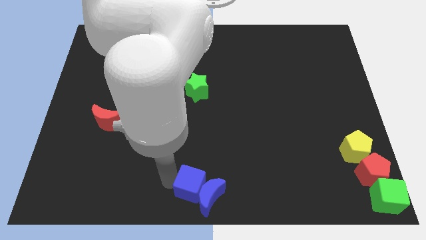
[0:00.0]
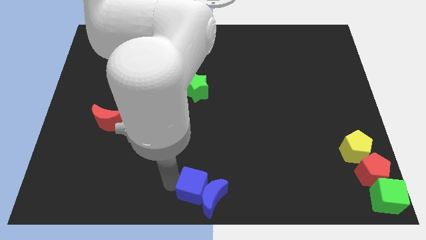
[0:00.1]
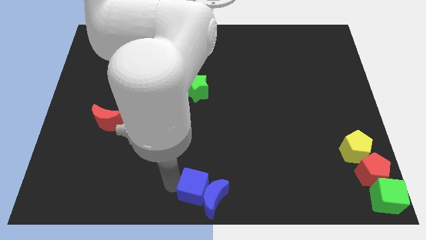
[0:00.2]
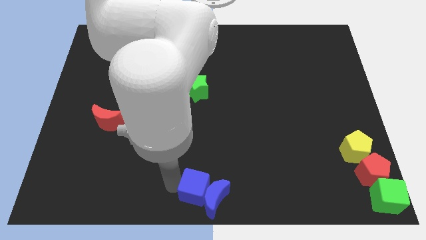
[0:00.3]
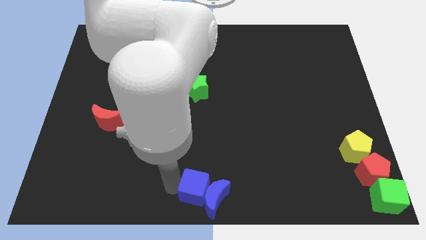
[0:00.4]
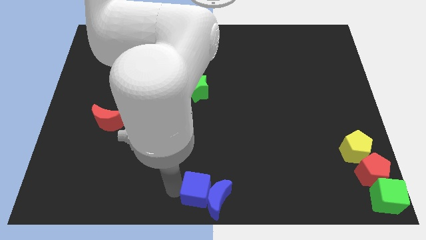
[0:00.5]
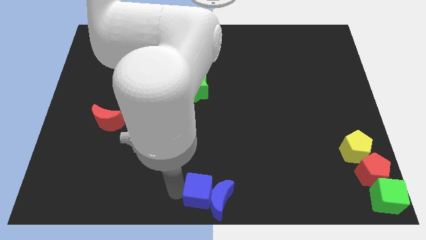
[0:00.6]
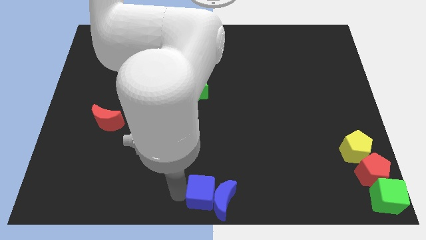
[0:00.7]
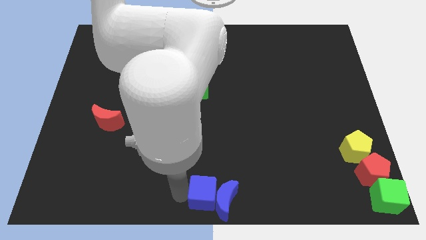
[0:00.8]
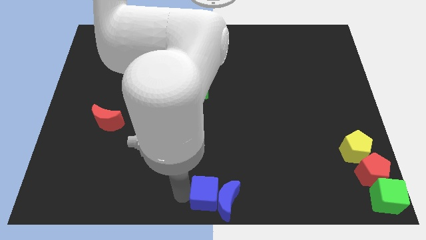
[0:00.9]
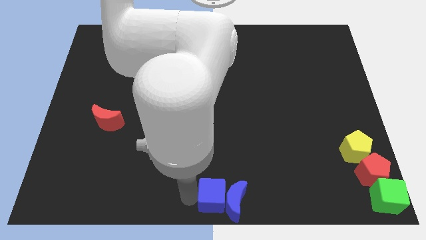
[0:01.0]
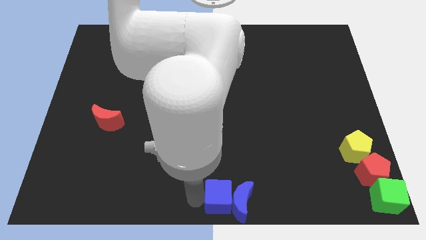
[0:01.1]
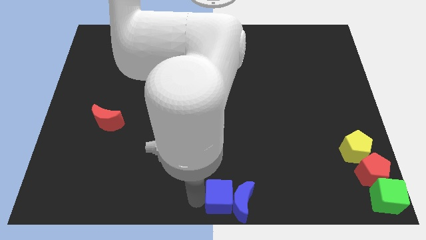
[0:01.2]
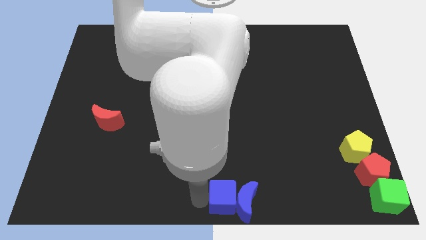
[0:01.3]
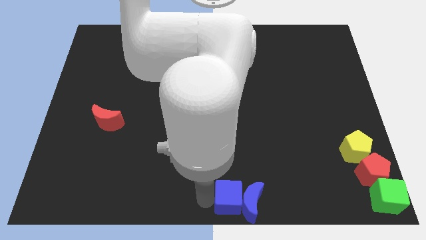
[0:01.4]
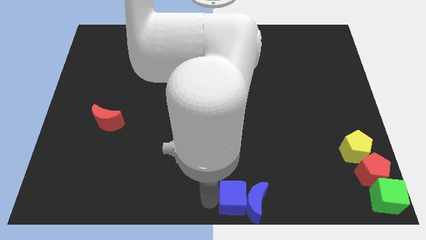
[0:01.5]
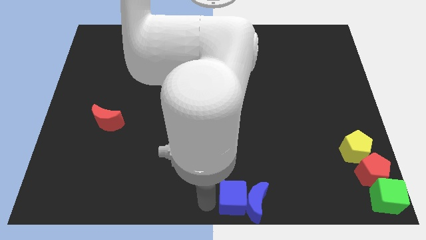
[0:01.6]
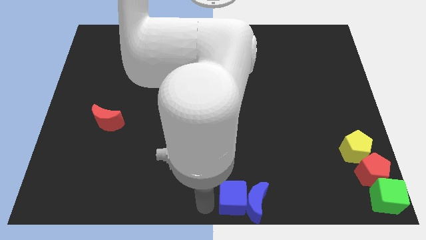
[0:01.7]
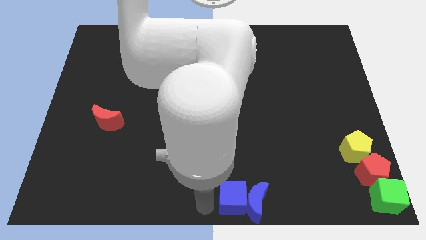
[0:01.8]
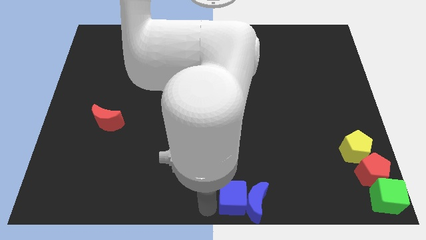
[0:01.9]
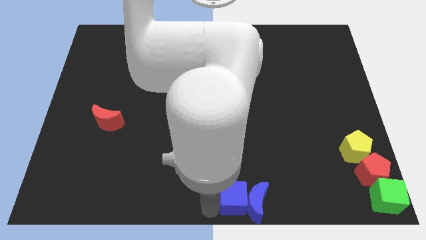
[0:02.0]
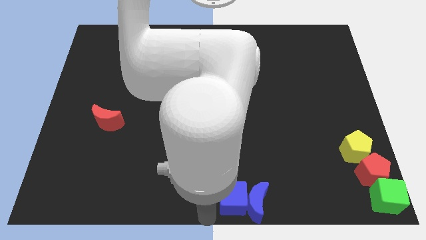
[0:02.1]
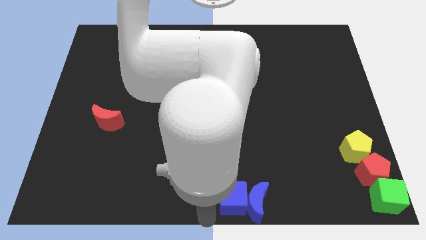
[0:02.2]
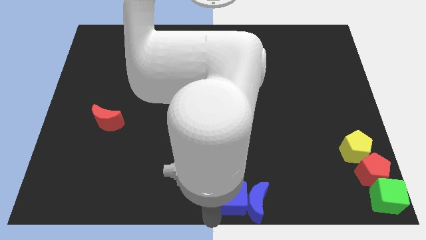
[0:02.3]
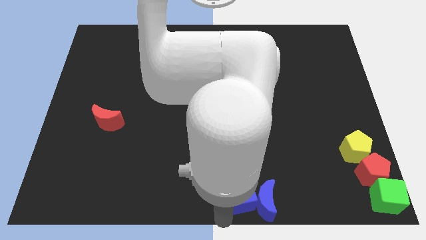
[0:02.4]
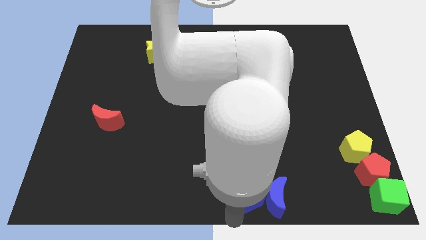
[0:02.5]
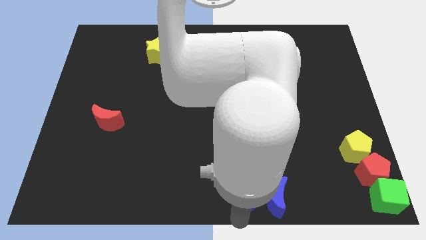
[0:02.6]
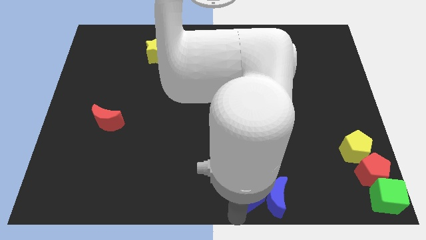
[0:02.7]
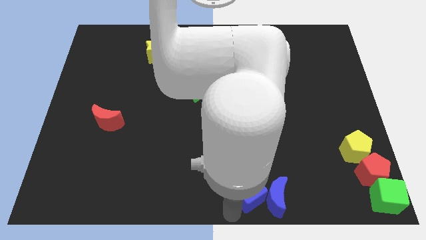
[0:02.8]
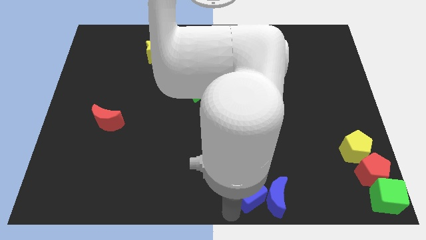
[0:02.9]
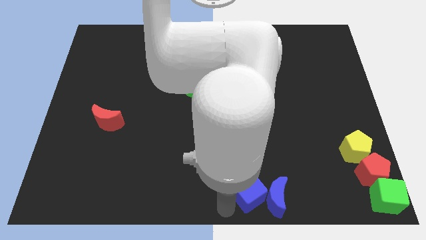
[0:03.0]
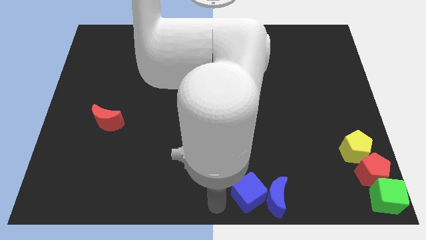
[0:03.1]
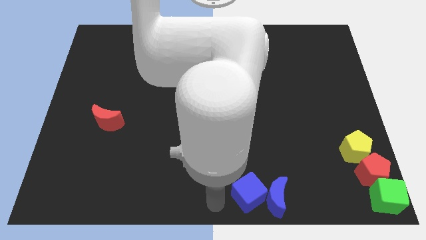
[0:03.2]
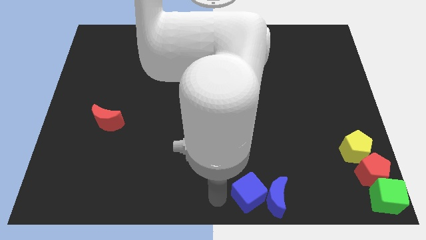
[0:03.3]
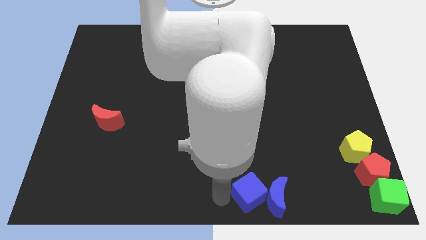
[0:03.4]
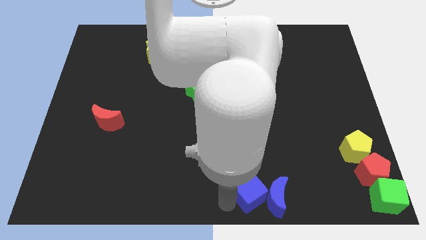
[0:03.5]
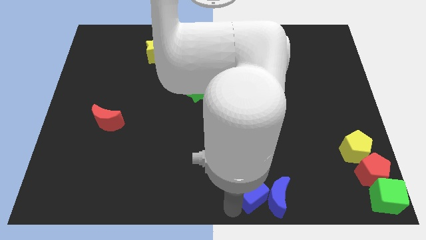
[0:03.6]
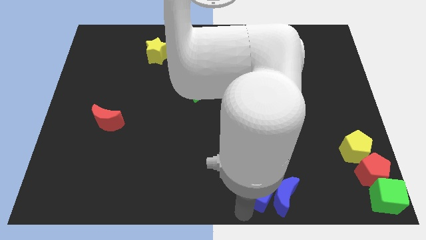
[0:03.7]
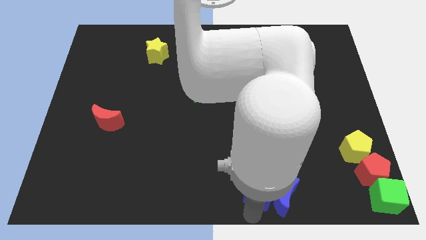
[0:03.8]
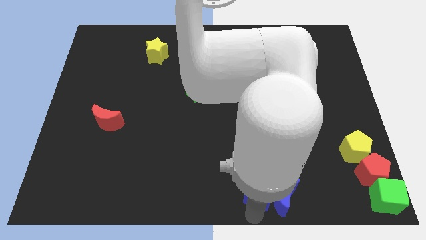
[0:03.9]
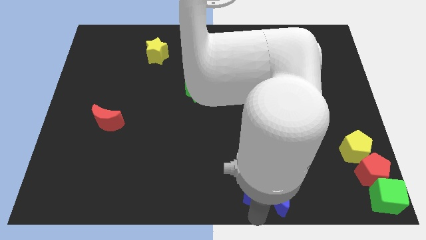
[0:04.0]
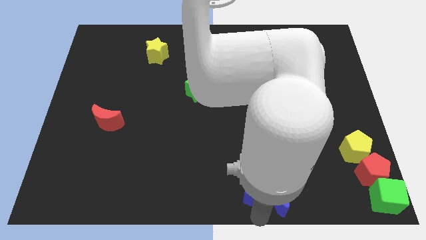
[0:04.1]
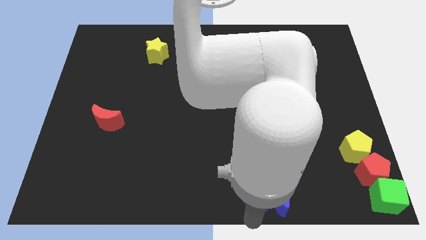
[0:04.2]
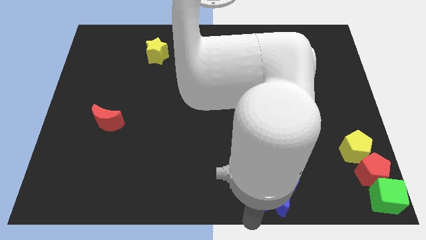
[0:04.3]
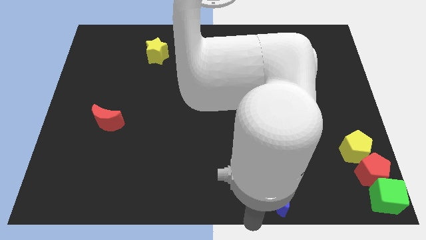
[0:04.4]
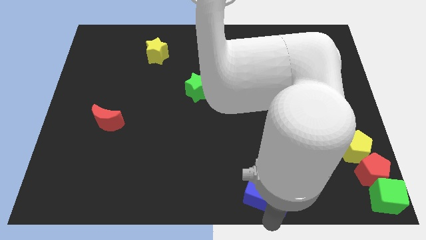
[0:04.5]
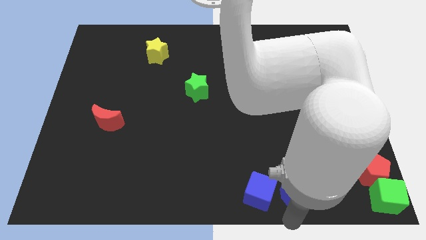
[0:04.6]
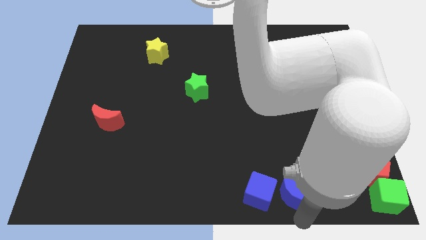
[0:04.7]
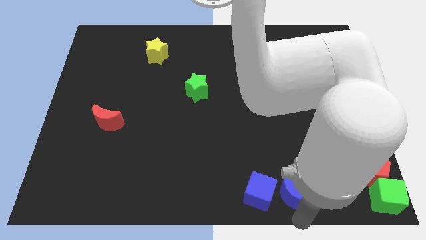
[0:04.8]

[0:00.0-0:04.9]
move the blue cube diagonally bottom right of the green star

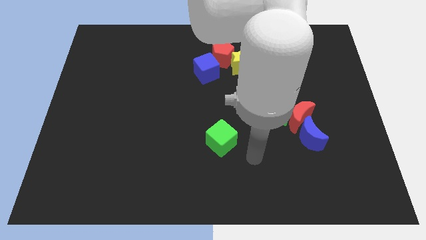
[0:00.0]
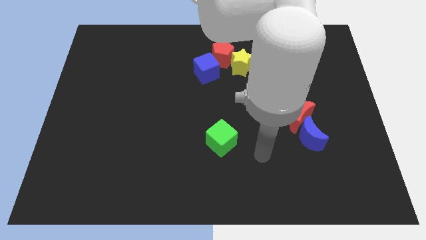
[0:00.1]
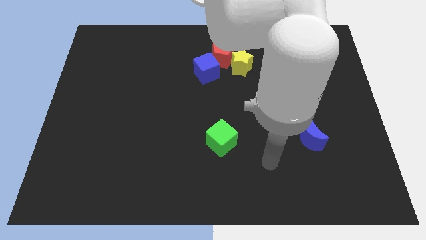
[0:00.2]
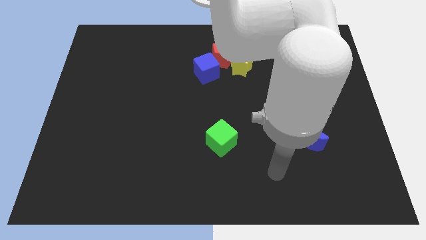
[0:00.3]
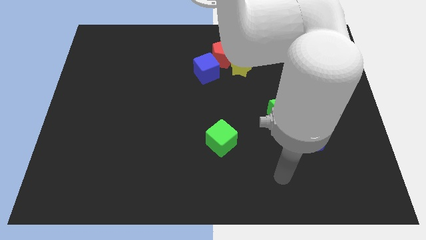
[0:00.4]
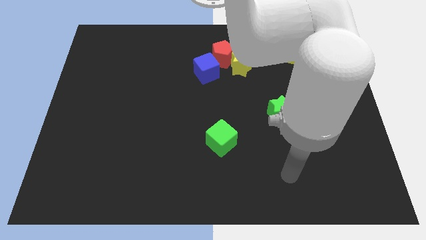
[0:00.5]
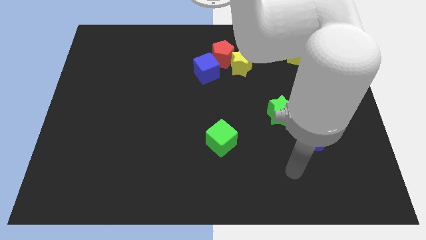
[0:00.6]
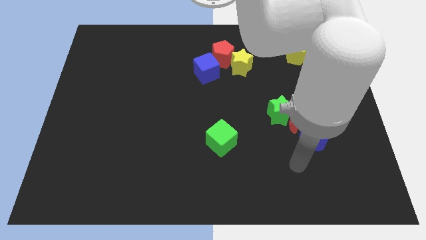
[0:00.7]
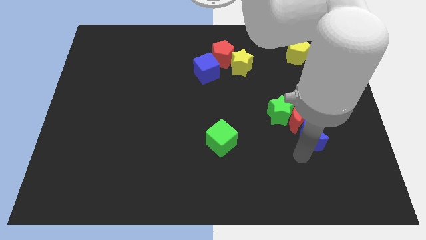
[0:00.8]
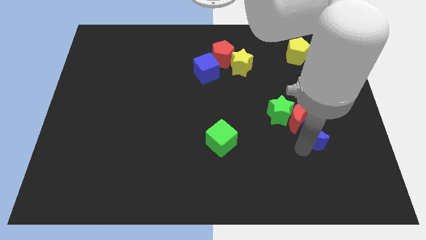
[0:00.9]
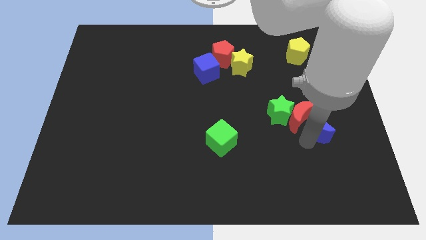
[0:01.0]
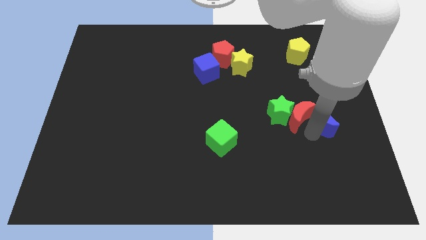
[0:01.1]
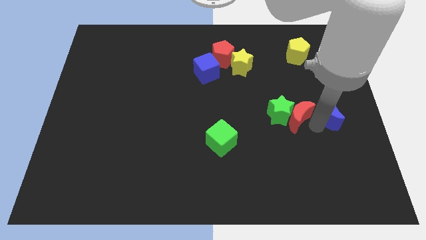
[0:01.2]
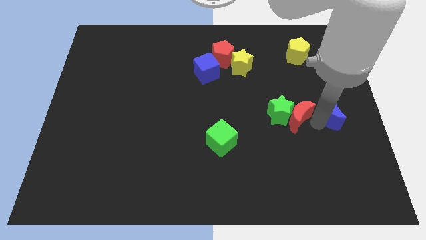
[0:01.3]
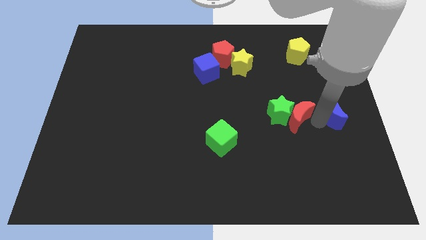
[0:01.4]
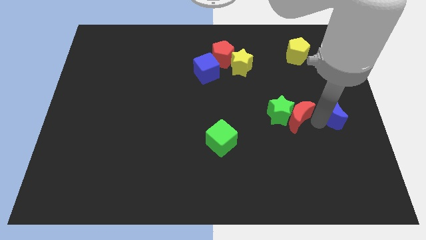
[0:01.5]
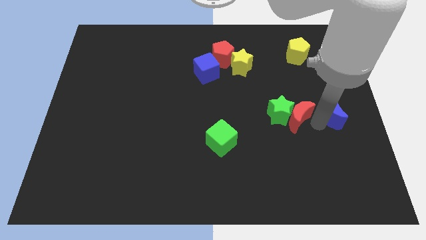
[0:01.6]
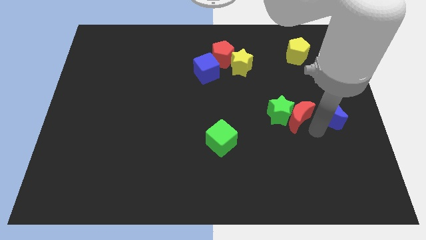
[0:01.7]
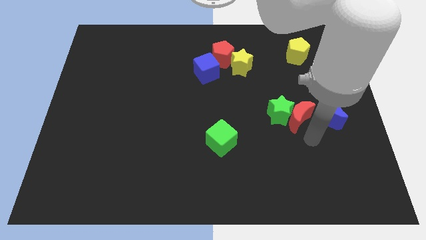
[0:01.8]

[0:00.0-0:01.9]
separate blue moon from the red moon

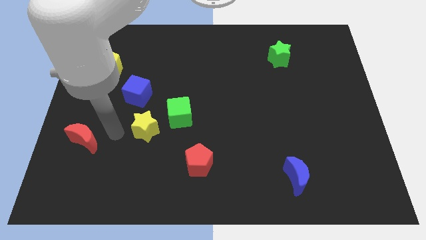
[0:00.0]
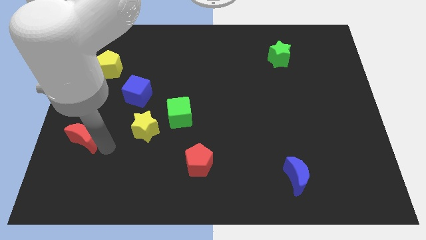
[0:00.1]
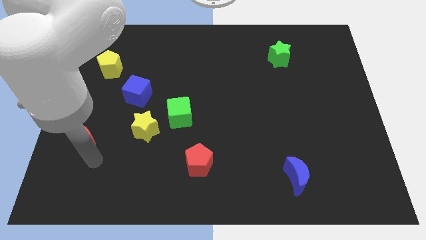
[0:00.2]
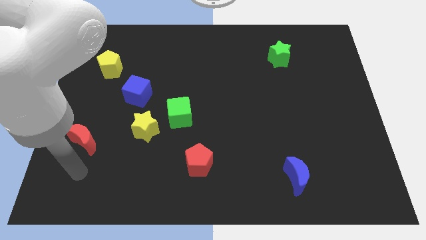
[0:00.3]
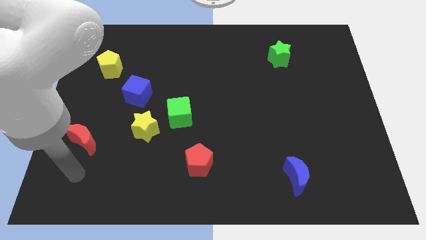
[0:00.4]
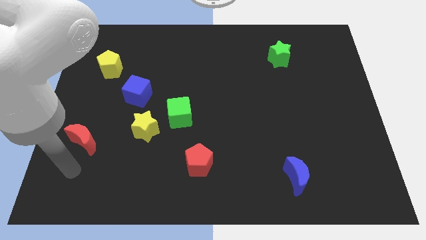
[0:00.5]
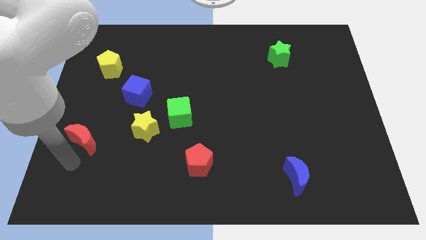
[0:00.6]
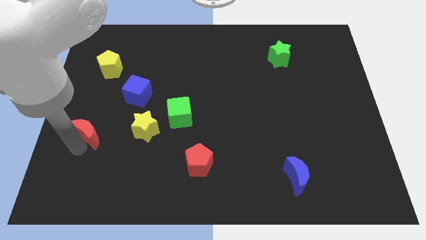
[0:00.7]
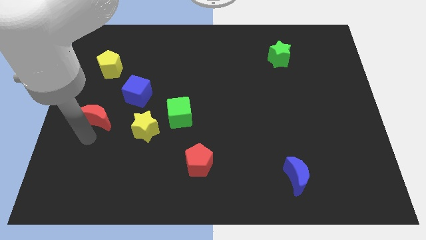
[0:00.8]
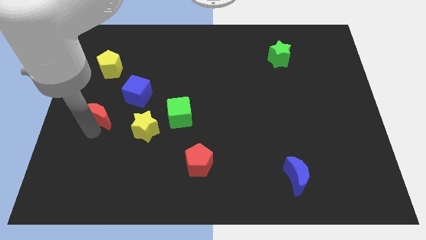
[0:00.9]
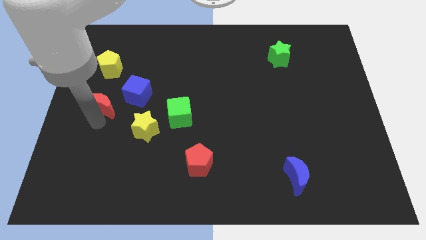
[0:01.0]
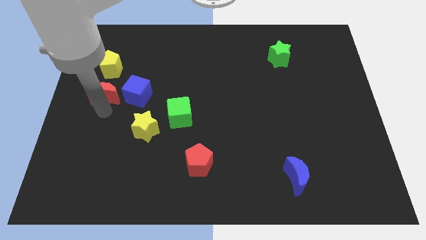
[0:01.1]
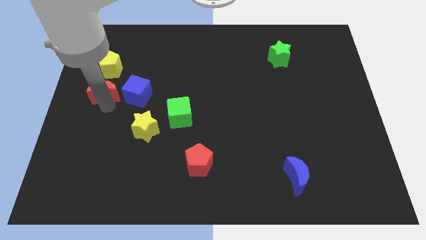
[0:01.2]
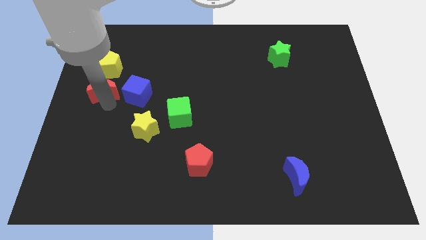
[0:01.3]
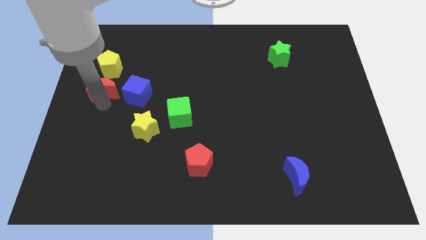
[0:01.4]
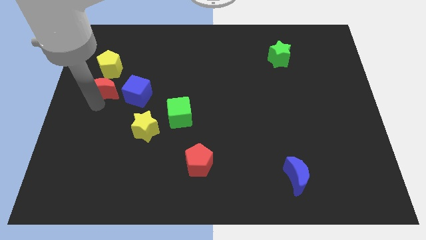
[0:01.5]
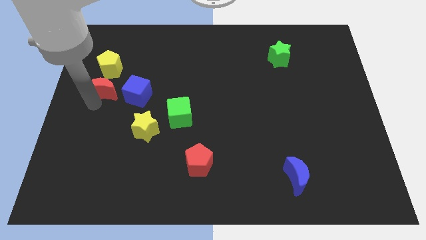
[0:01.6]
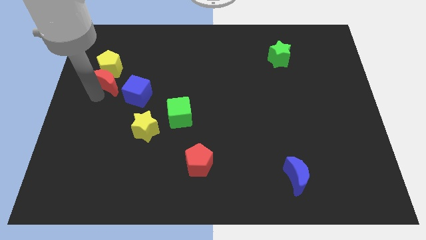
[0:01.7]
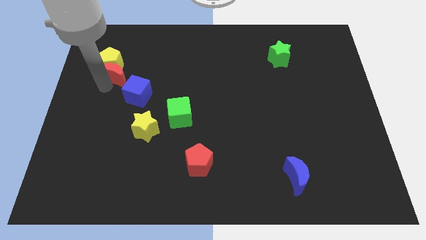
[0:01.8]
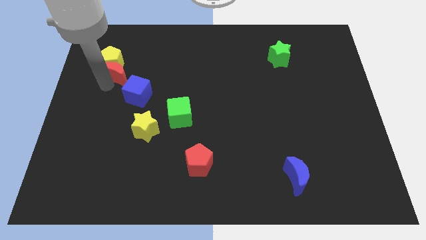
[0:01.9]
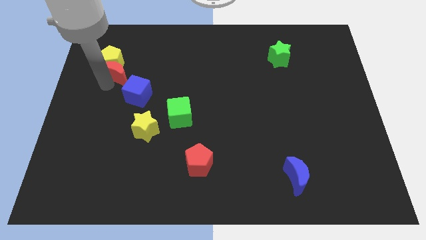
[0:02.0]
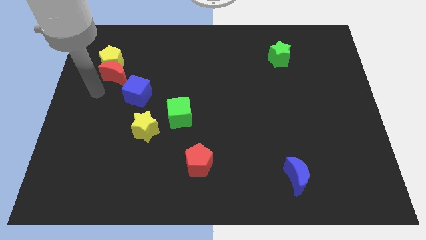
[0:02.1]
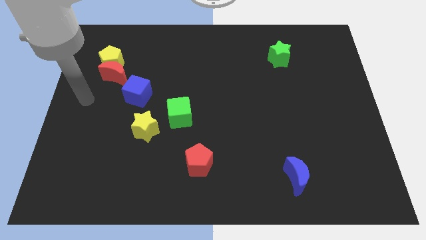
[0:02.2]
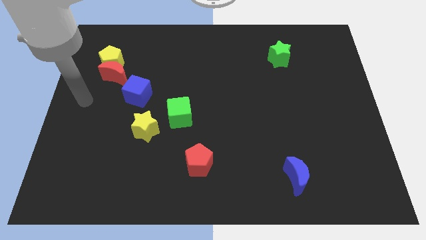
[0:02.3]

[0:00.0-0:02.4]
move red moon diagonally top left to the blue cube
